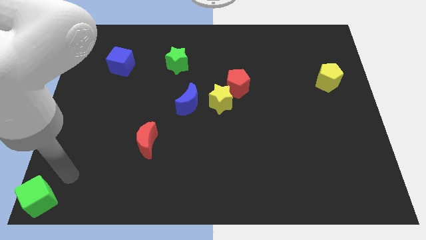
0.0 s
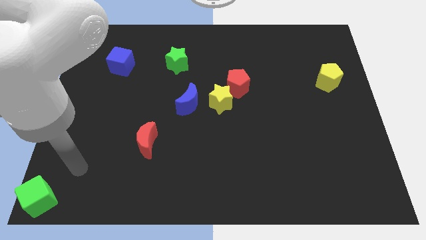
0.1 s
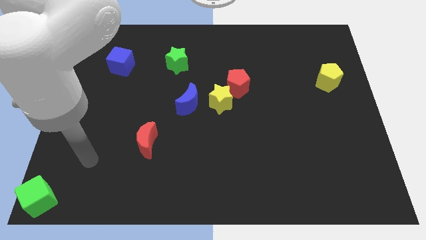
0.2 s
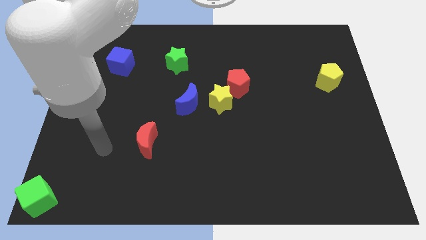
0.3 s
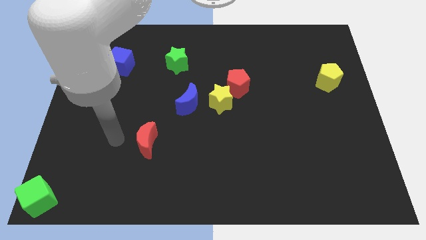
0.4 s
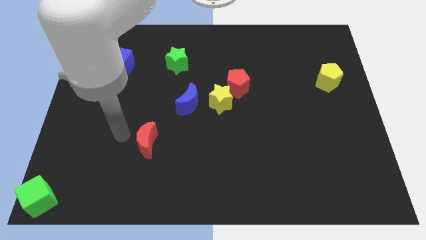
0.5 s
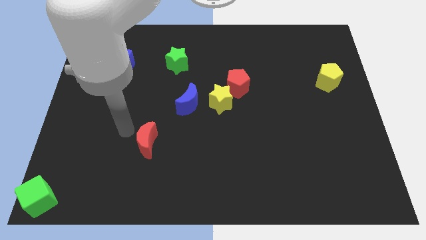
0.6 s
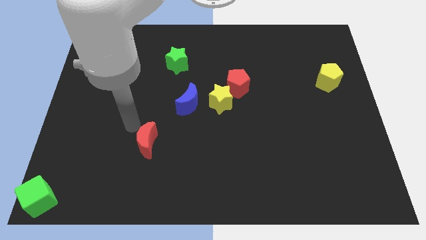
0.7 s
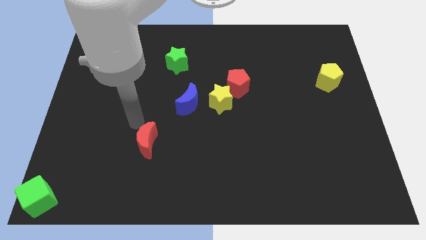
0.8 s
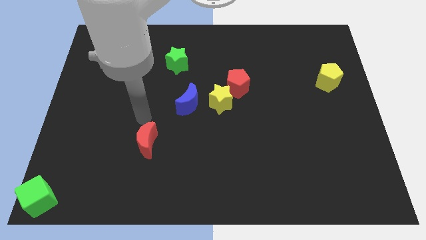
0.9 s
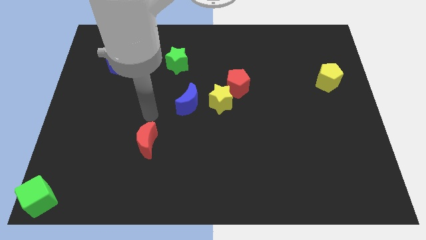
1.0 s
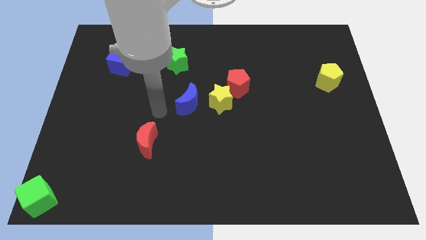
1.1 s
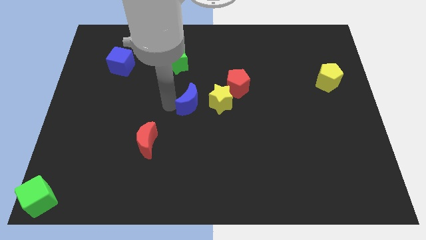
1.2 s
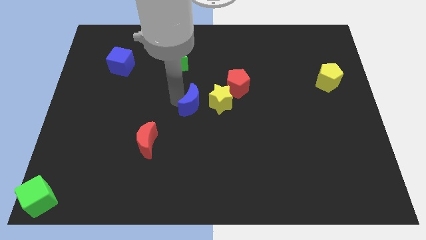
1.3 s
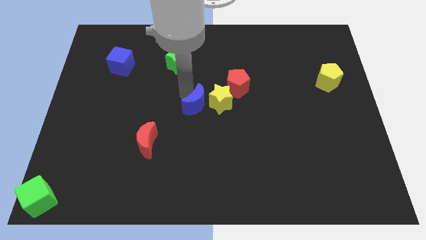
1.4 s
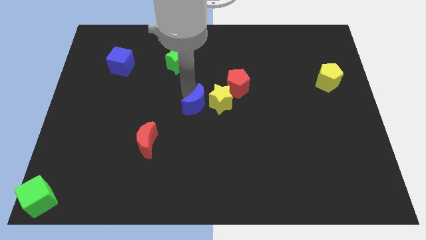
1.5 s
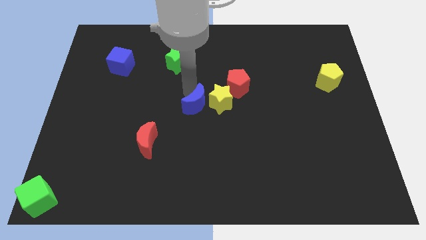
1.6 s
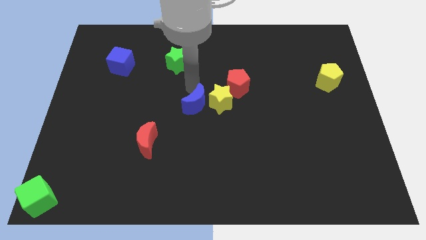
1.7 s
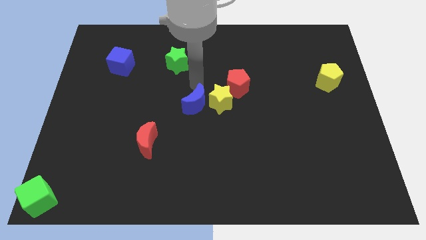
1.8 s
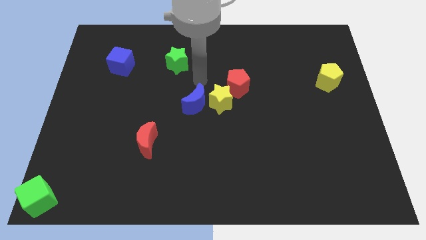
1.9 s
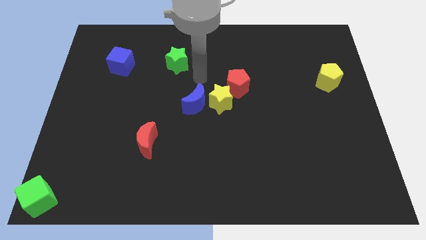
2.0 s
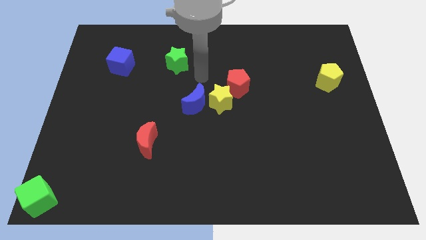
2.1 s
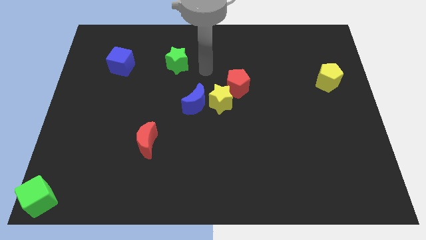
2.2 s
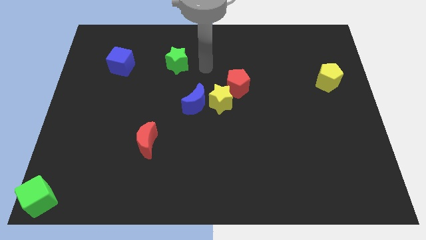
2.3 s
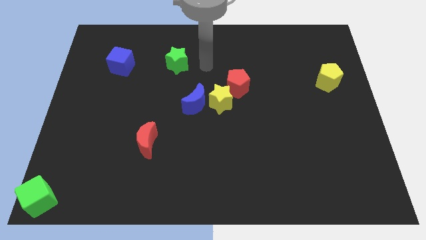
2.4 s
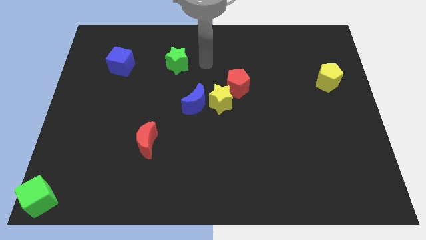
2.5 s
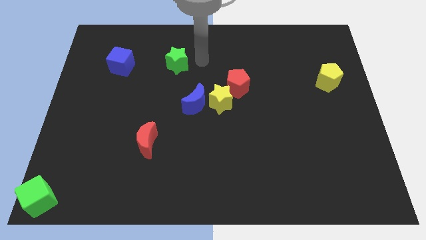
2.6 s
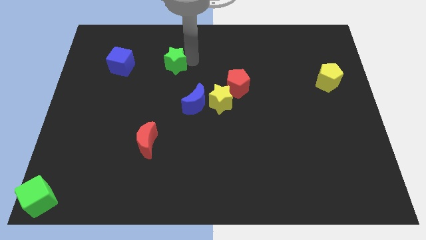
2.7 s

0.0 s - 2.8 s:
move the blue moon slightly to the left of yellow star

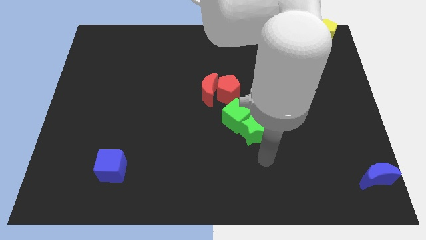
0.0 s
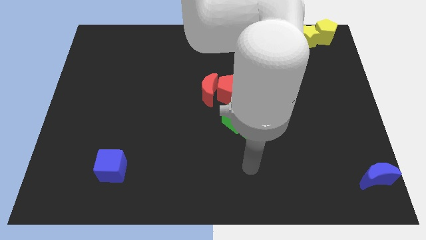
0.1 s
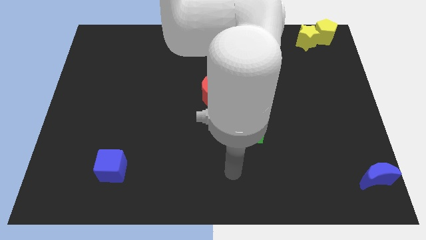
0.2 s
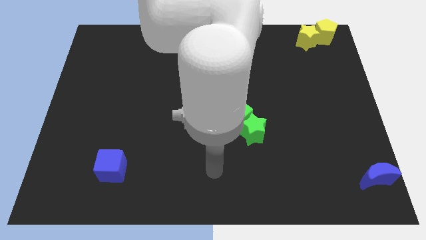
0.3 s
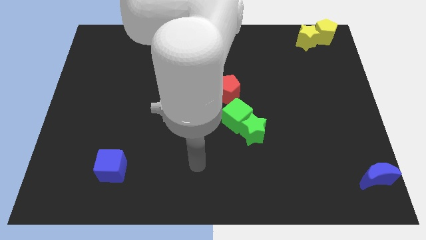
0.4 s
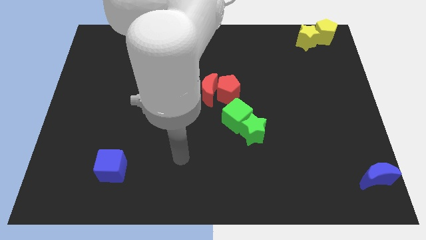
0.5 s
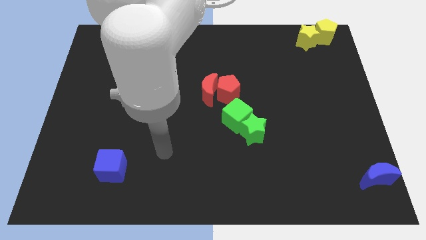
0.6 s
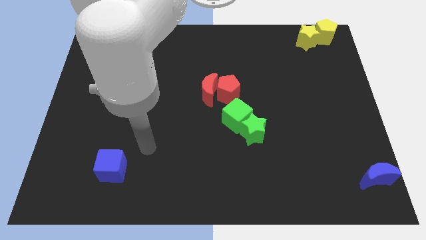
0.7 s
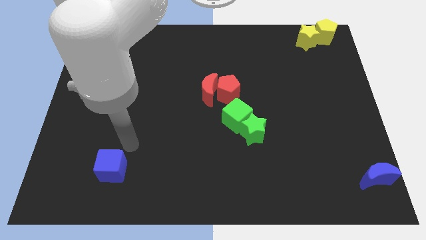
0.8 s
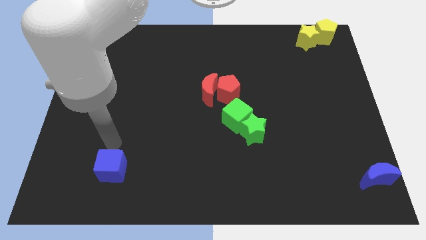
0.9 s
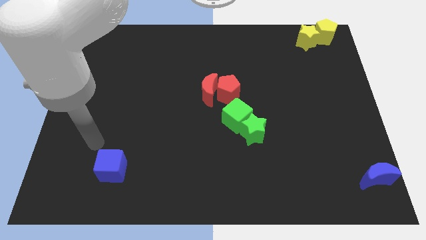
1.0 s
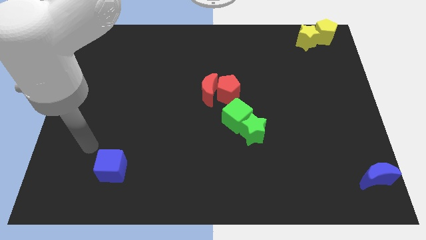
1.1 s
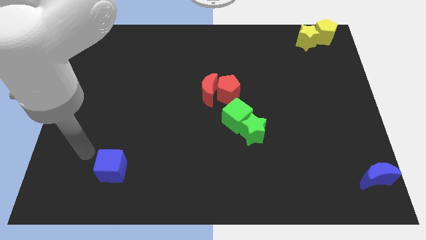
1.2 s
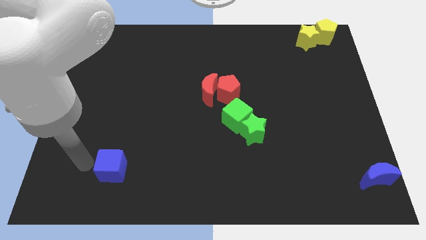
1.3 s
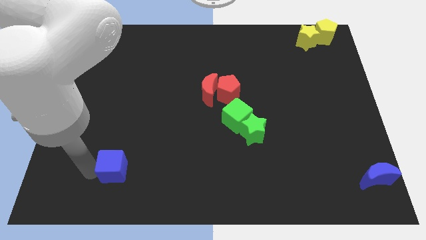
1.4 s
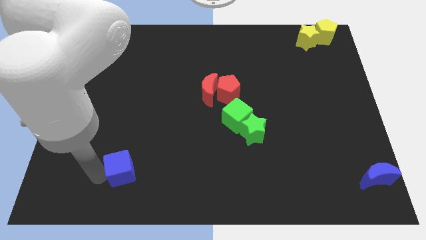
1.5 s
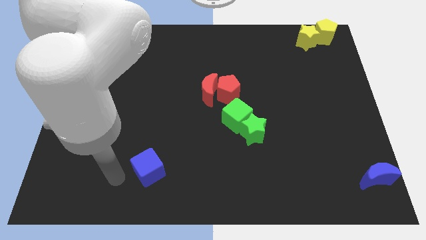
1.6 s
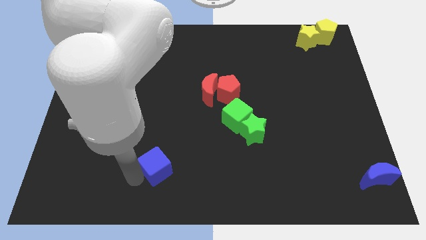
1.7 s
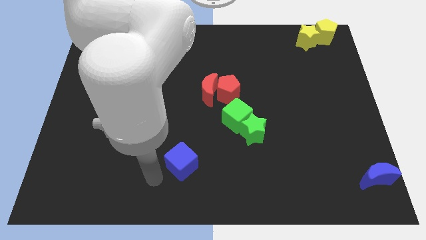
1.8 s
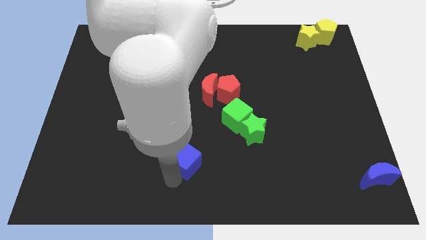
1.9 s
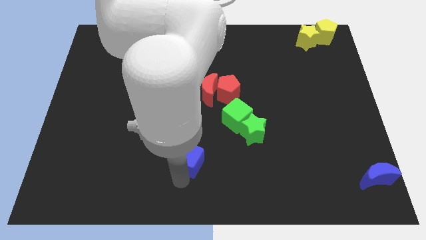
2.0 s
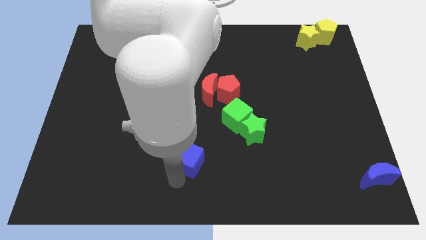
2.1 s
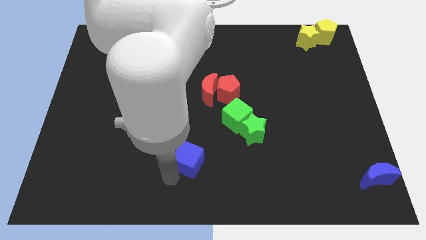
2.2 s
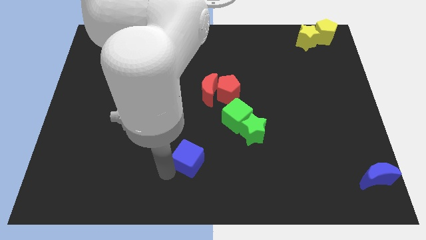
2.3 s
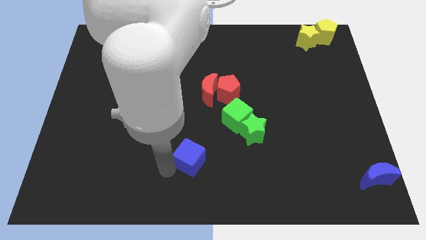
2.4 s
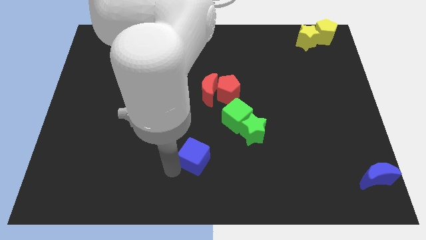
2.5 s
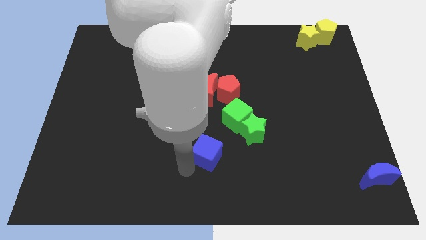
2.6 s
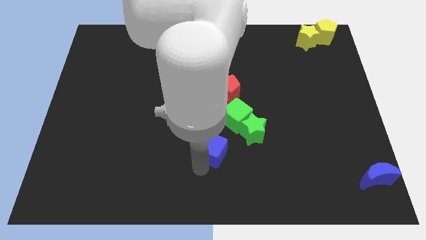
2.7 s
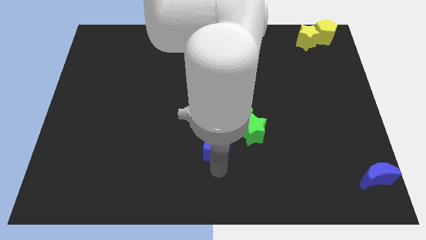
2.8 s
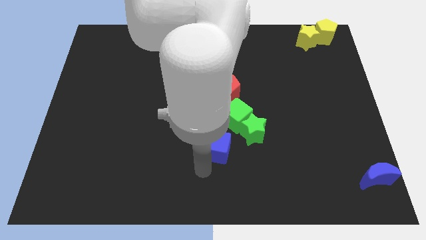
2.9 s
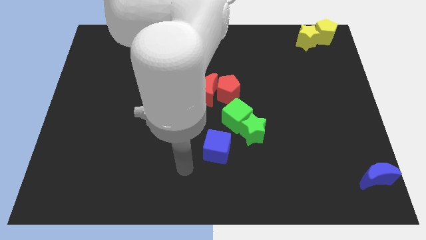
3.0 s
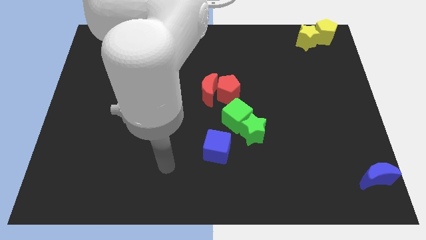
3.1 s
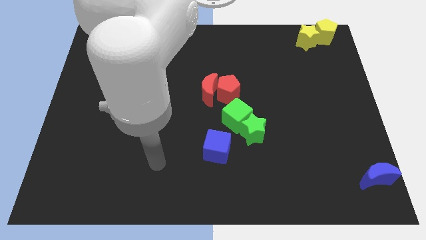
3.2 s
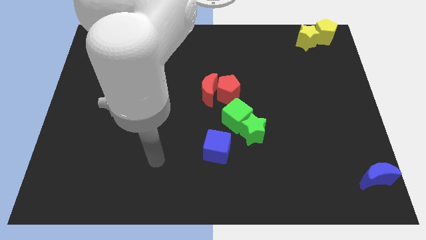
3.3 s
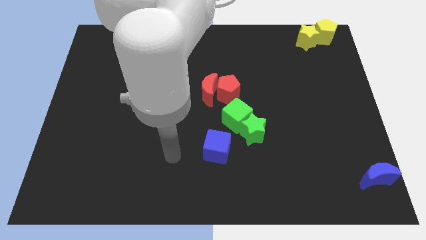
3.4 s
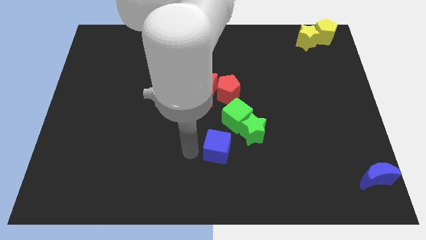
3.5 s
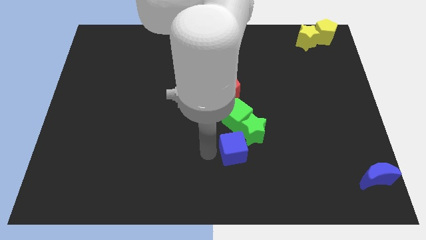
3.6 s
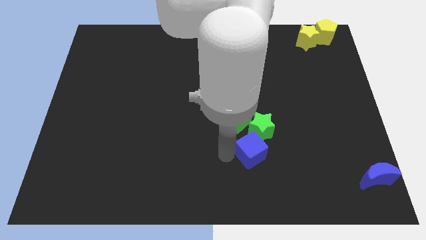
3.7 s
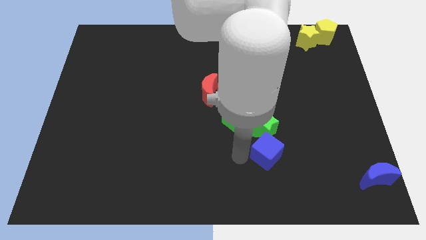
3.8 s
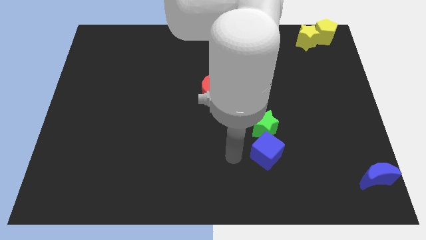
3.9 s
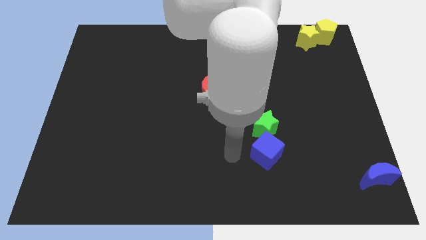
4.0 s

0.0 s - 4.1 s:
move the blue cube into the green star

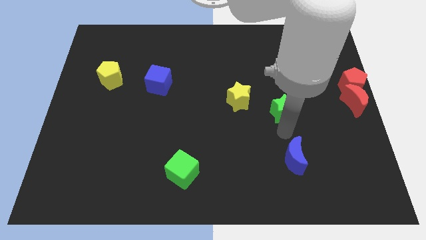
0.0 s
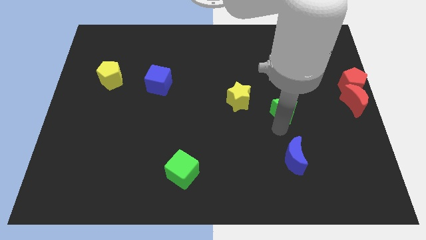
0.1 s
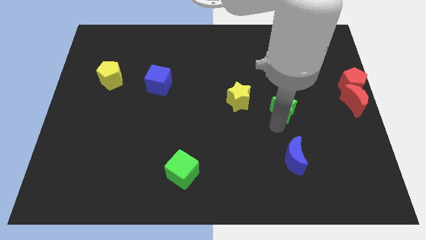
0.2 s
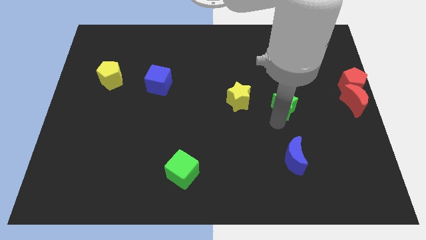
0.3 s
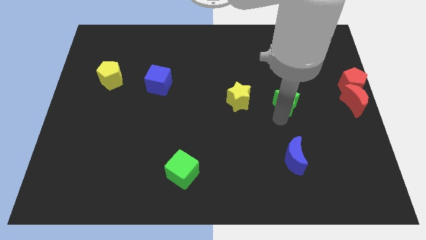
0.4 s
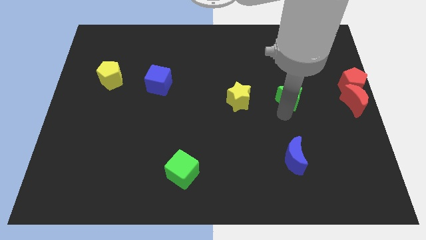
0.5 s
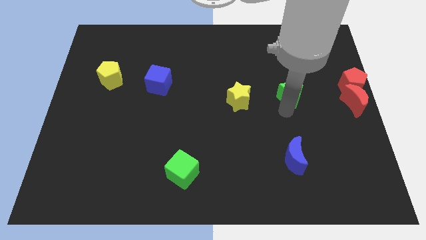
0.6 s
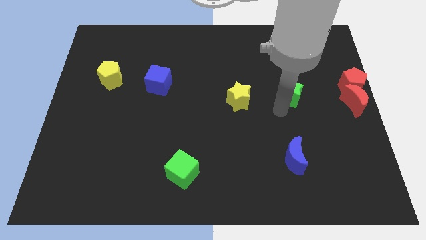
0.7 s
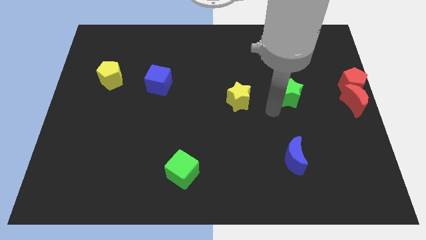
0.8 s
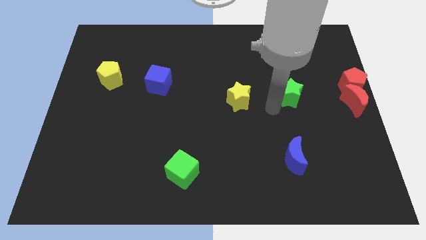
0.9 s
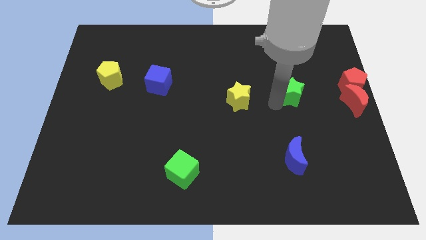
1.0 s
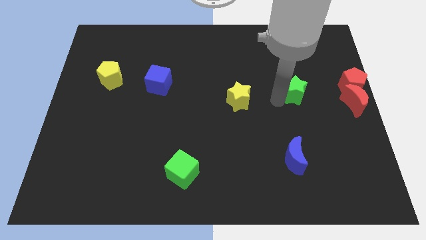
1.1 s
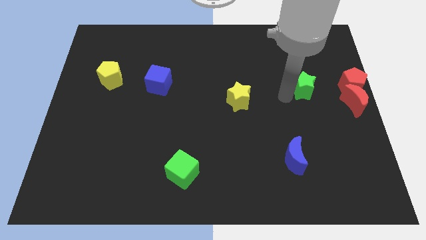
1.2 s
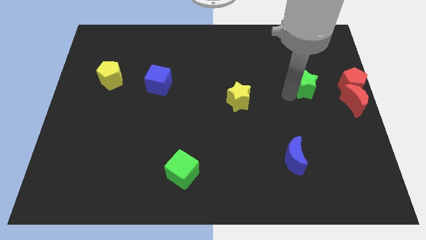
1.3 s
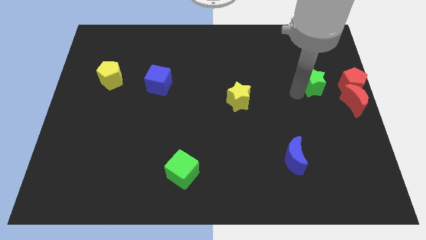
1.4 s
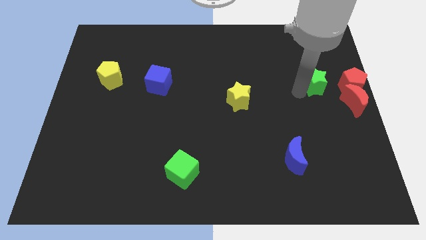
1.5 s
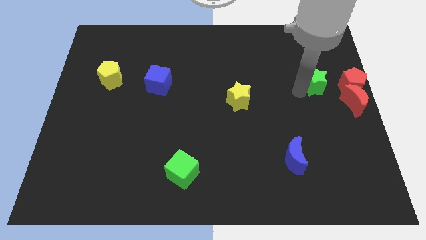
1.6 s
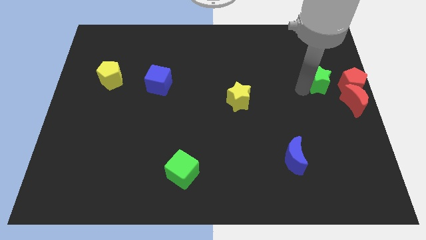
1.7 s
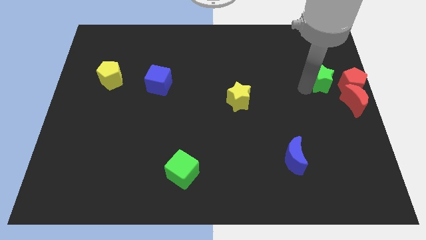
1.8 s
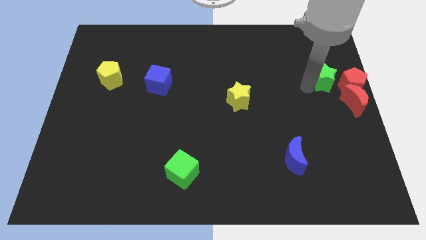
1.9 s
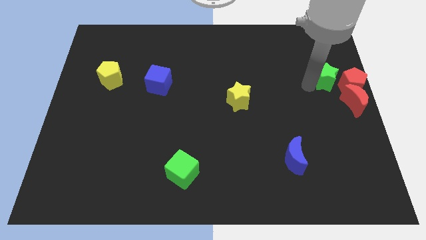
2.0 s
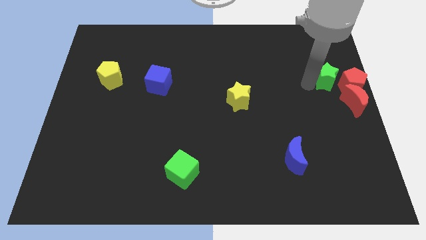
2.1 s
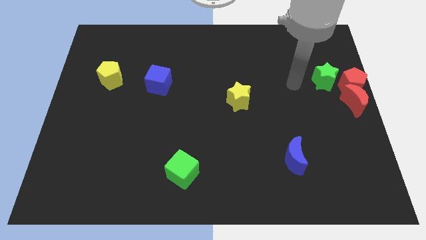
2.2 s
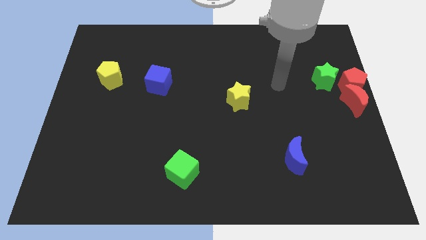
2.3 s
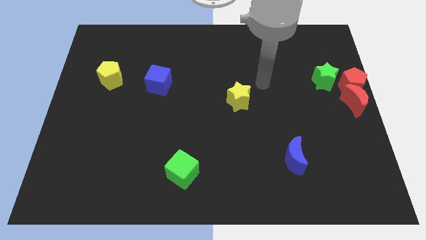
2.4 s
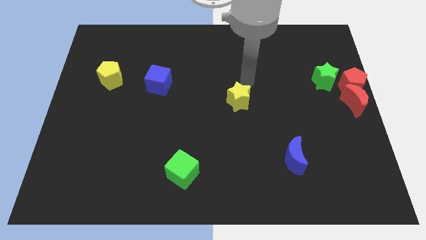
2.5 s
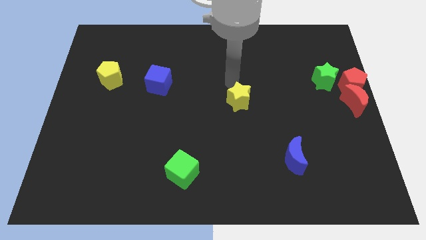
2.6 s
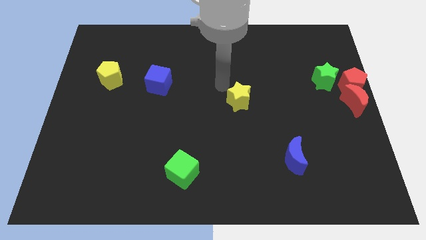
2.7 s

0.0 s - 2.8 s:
push the green star to the left of the red pentagon
